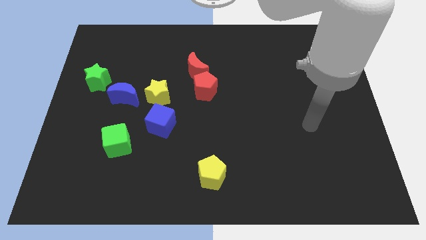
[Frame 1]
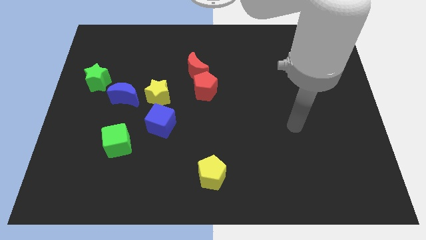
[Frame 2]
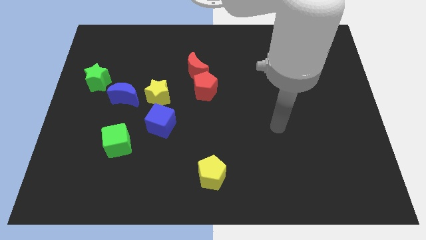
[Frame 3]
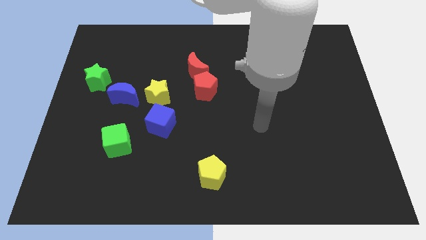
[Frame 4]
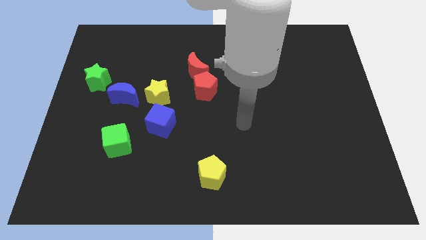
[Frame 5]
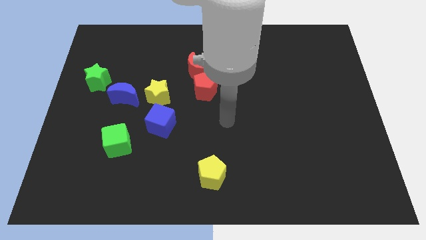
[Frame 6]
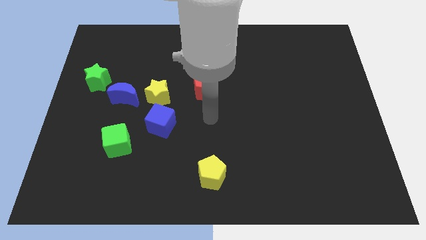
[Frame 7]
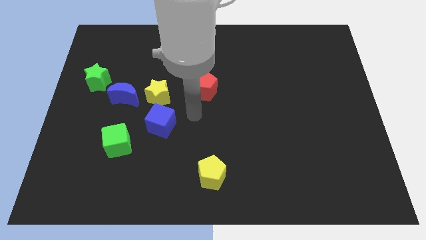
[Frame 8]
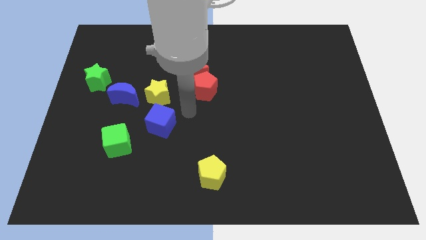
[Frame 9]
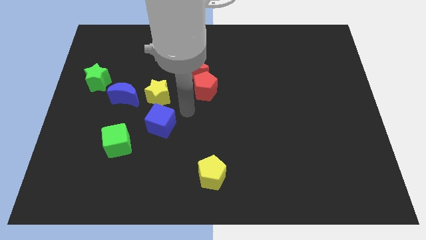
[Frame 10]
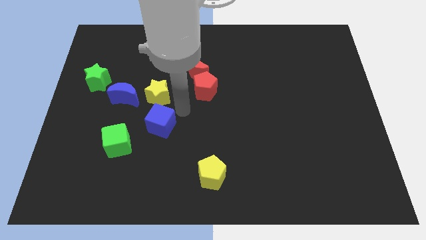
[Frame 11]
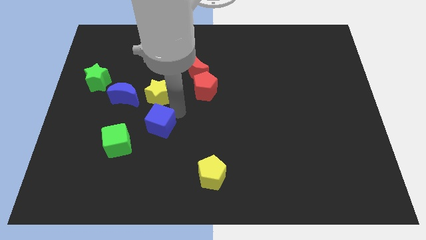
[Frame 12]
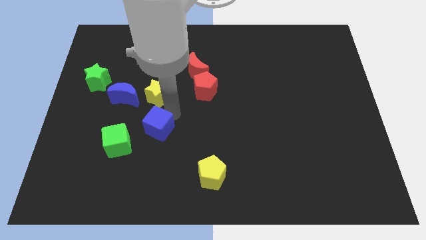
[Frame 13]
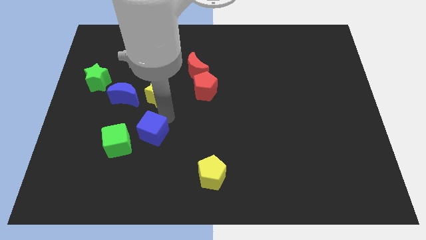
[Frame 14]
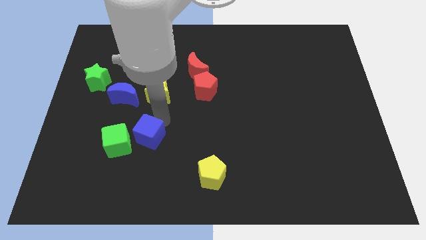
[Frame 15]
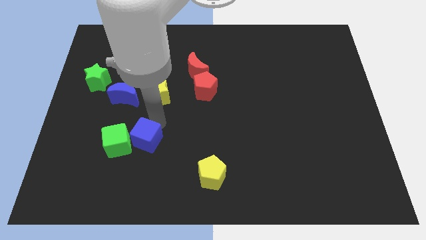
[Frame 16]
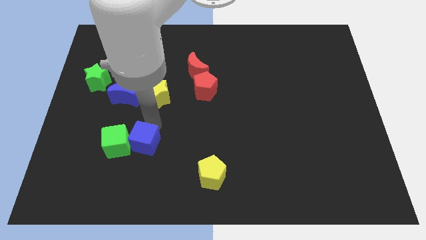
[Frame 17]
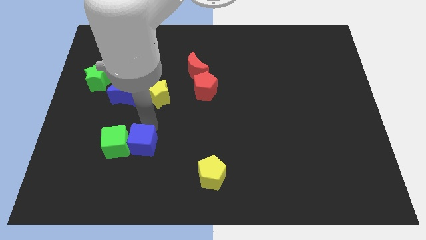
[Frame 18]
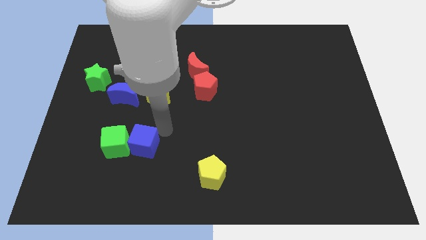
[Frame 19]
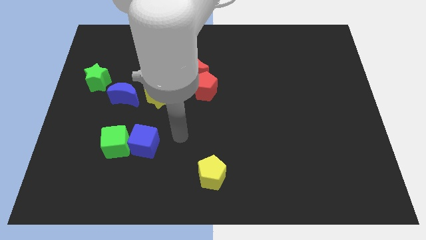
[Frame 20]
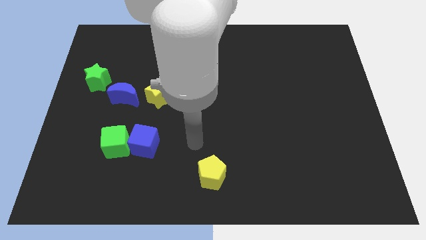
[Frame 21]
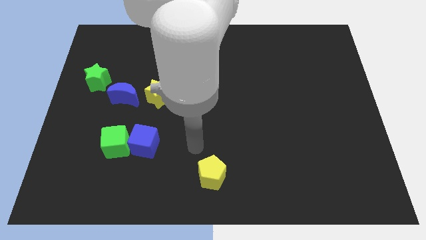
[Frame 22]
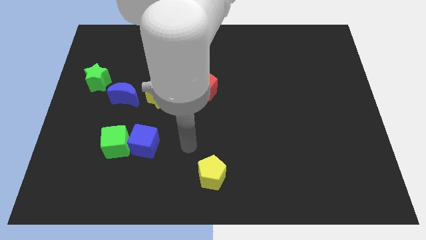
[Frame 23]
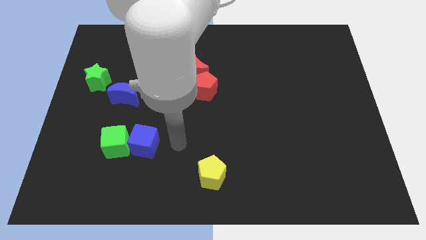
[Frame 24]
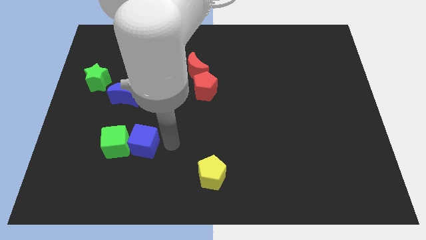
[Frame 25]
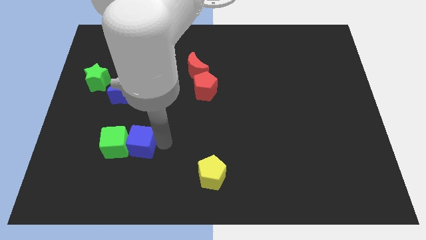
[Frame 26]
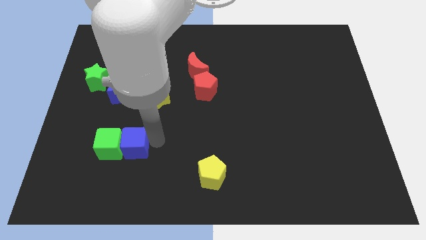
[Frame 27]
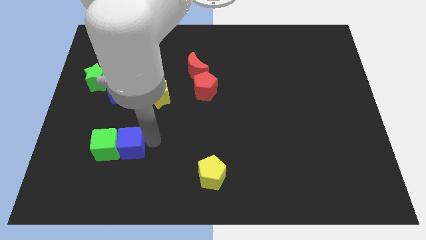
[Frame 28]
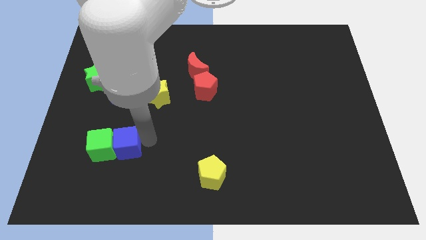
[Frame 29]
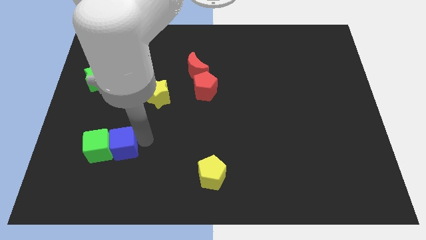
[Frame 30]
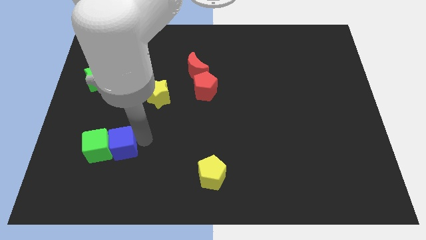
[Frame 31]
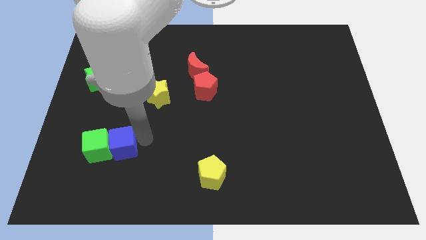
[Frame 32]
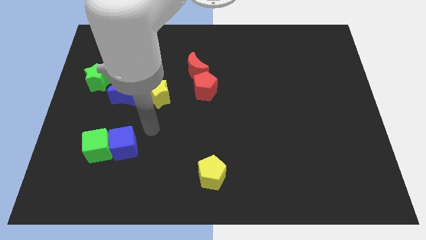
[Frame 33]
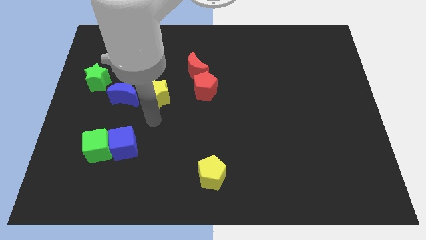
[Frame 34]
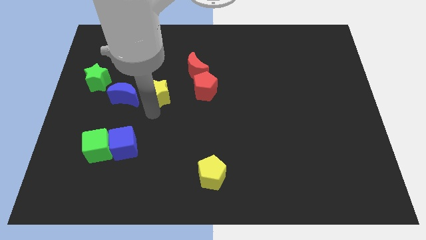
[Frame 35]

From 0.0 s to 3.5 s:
push the blue cube into the green cube

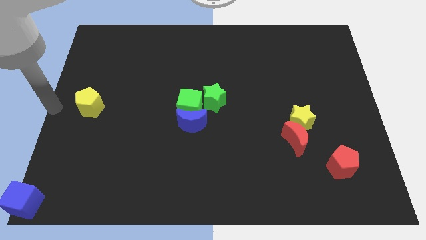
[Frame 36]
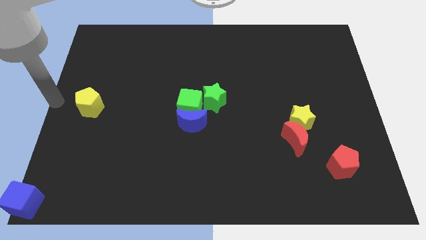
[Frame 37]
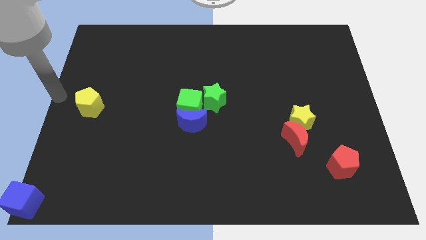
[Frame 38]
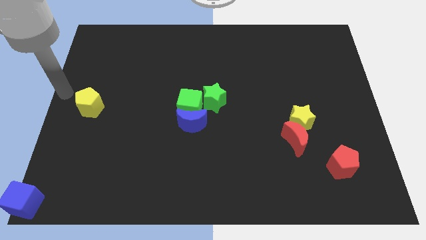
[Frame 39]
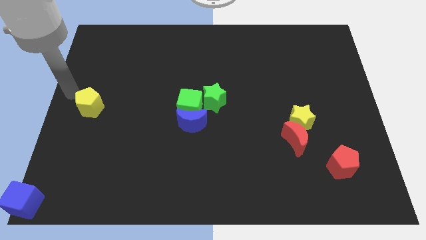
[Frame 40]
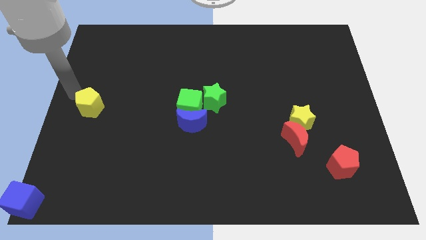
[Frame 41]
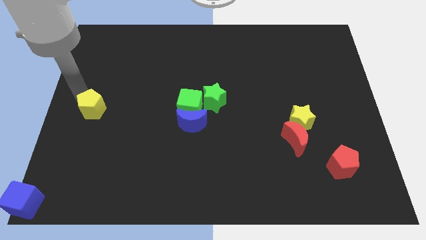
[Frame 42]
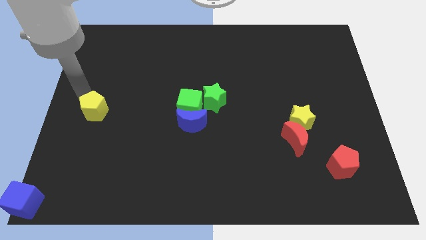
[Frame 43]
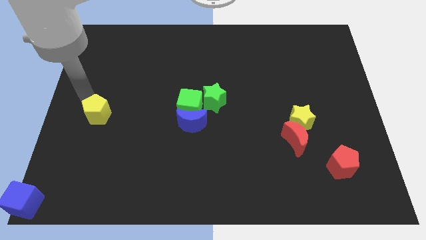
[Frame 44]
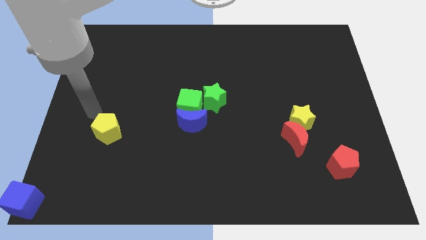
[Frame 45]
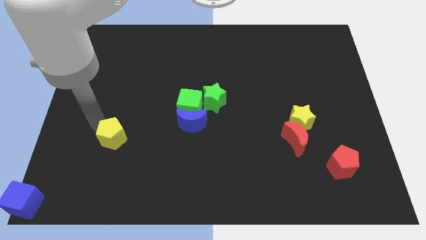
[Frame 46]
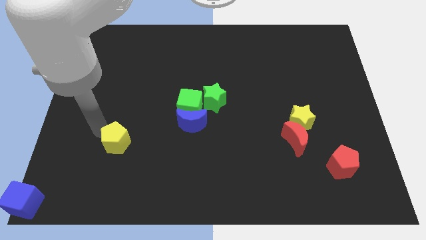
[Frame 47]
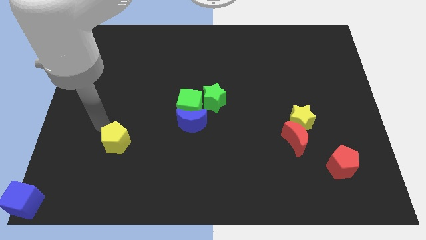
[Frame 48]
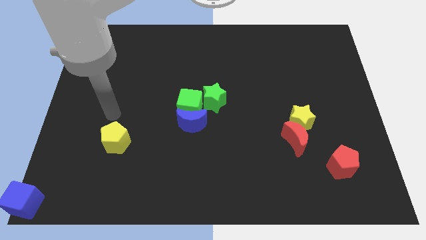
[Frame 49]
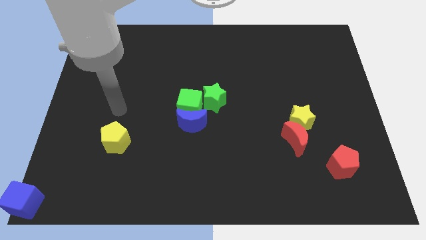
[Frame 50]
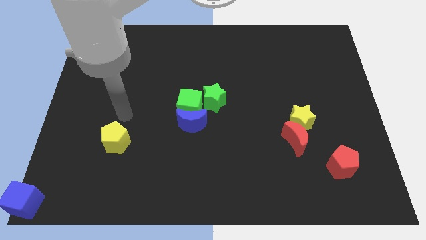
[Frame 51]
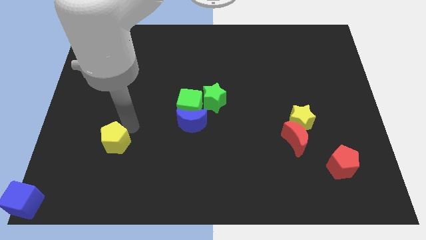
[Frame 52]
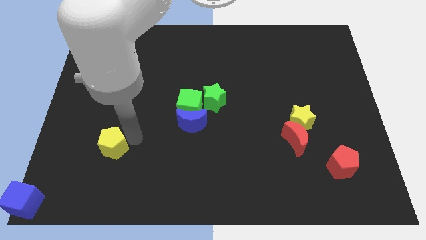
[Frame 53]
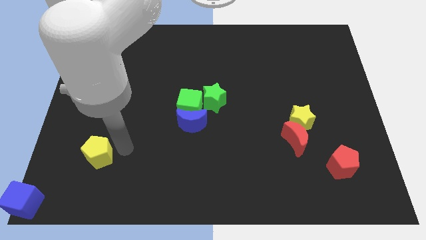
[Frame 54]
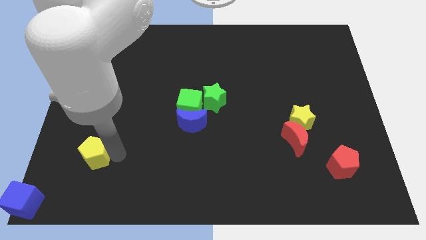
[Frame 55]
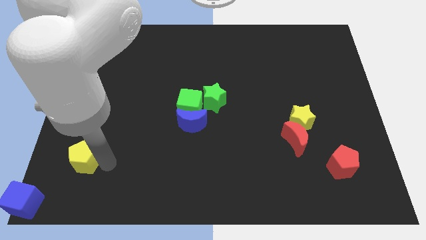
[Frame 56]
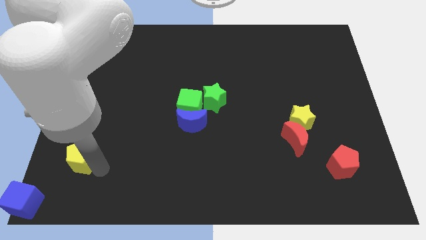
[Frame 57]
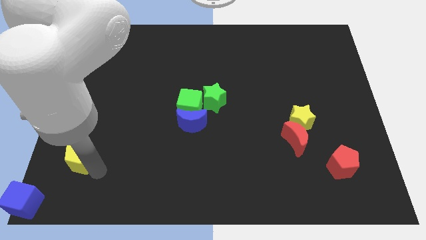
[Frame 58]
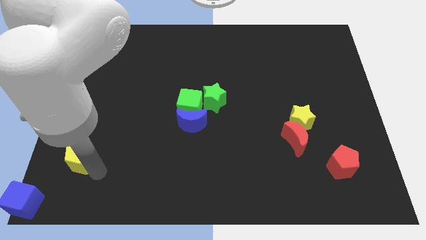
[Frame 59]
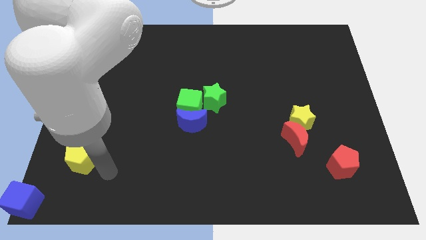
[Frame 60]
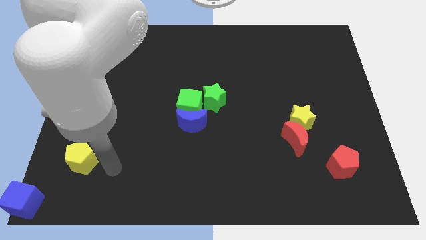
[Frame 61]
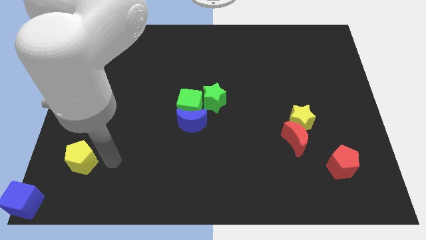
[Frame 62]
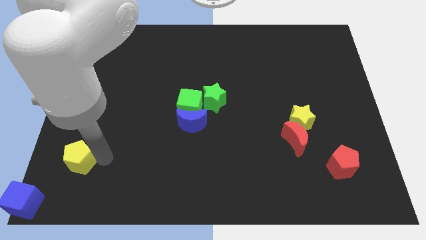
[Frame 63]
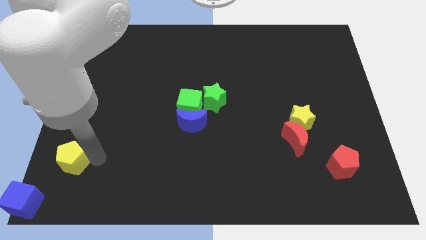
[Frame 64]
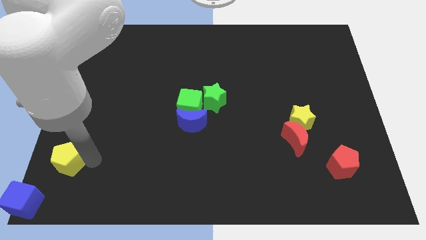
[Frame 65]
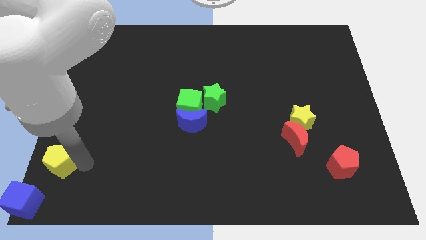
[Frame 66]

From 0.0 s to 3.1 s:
move yellow pentagon towards blue cube

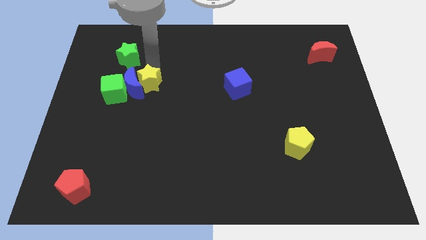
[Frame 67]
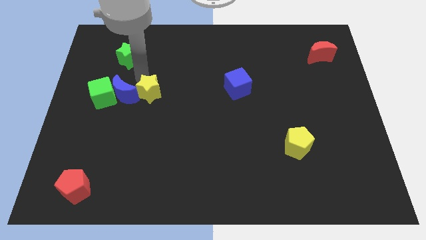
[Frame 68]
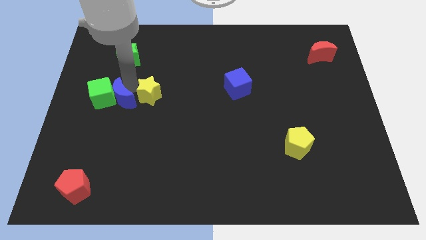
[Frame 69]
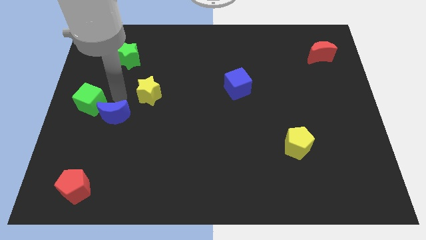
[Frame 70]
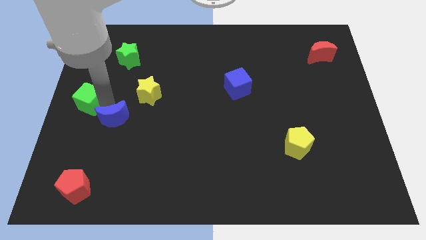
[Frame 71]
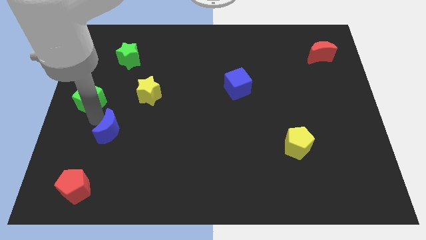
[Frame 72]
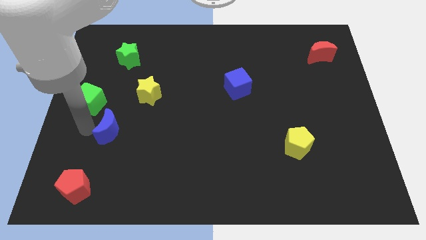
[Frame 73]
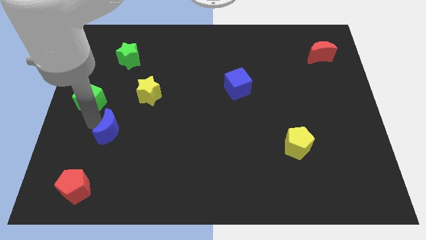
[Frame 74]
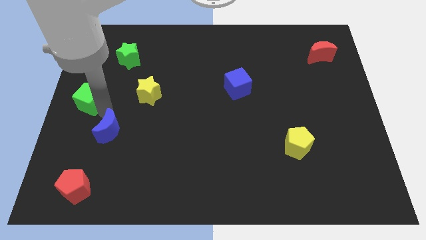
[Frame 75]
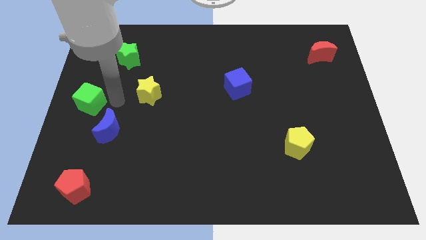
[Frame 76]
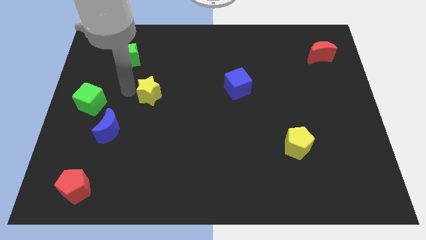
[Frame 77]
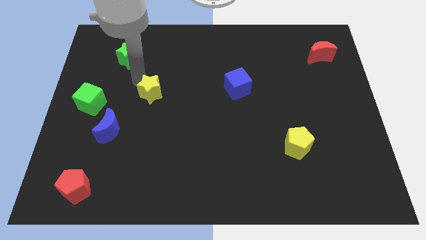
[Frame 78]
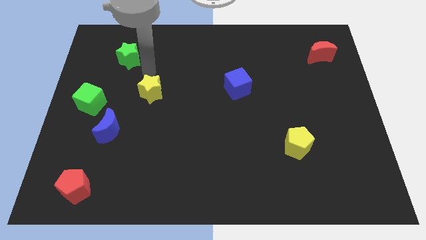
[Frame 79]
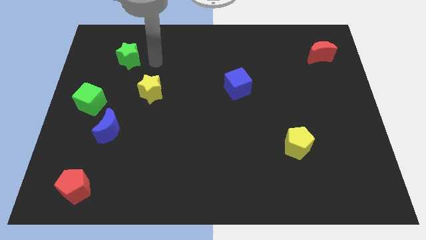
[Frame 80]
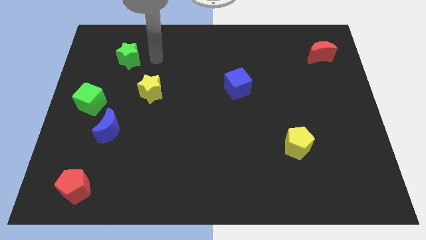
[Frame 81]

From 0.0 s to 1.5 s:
separate yellow star and the blue crescent

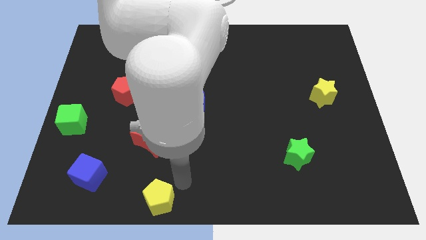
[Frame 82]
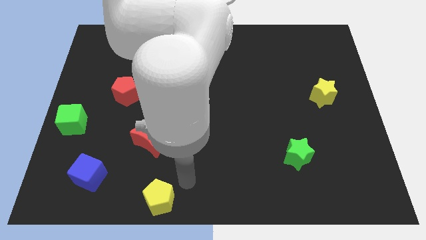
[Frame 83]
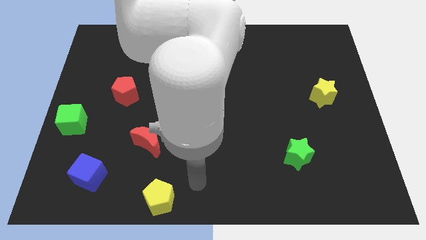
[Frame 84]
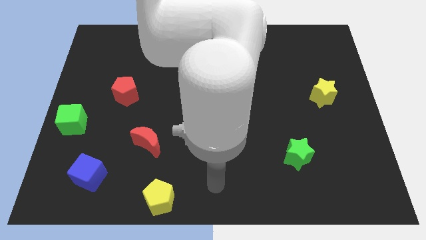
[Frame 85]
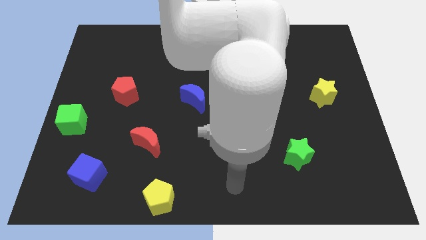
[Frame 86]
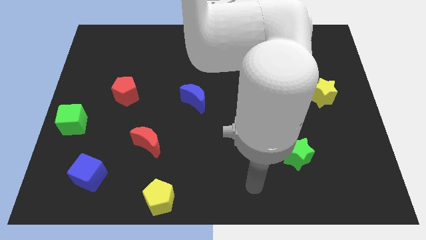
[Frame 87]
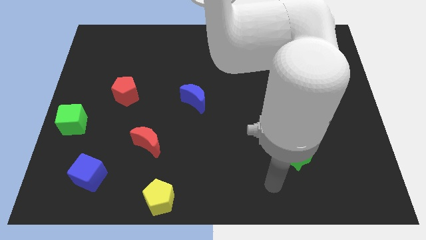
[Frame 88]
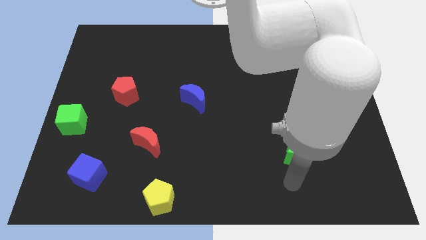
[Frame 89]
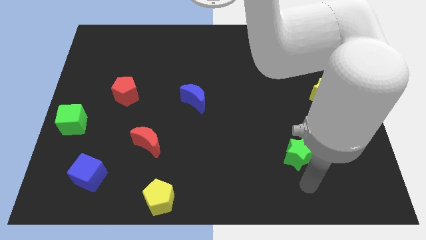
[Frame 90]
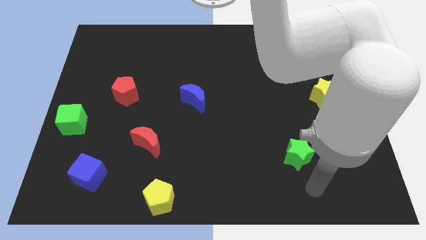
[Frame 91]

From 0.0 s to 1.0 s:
move your hand to the bottom of the green star
